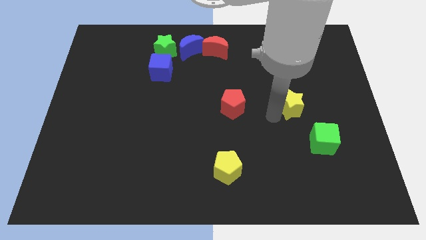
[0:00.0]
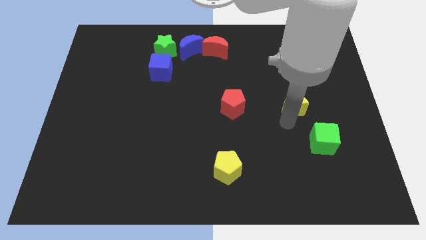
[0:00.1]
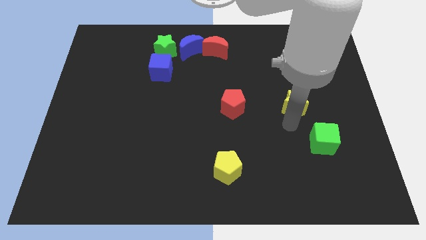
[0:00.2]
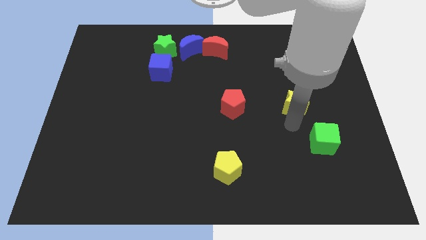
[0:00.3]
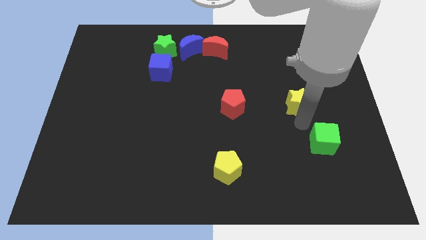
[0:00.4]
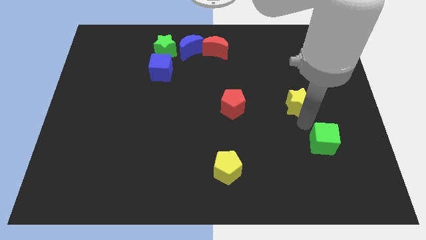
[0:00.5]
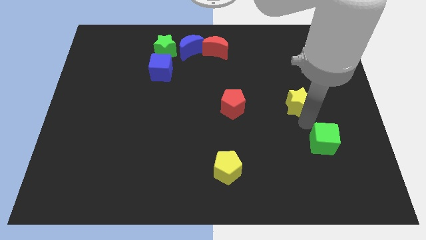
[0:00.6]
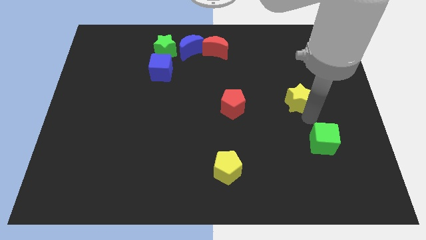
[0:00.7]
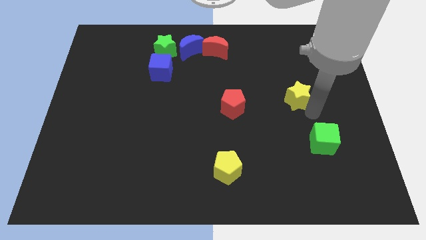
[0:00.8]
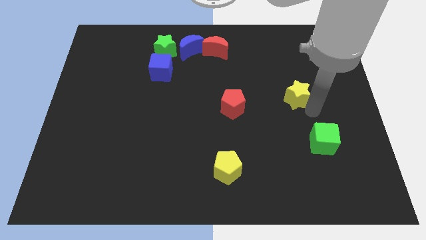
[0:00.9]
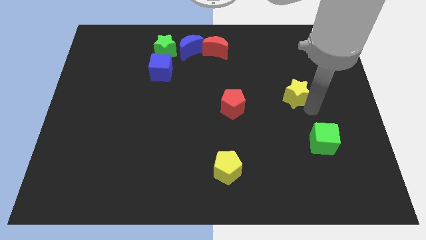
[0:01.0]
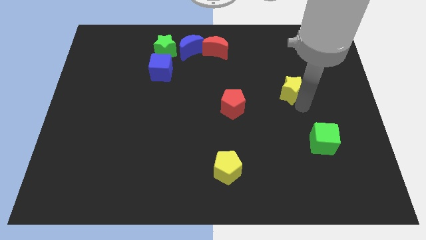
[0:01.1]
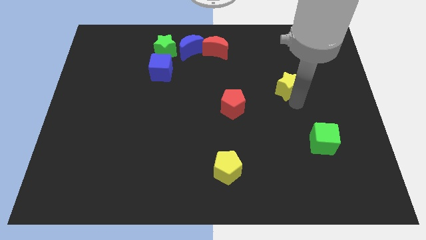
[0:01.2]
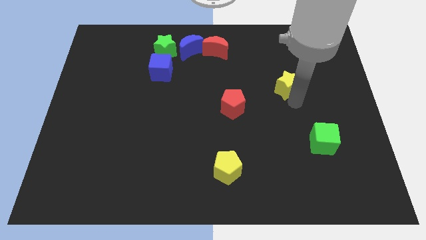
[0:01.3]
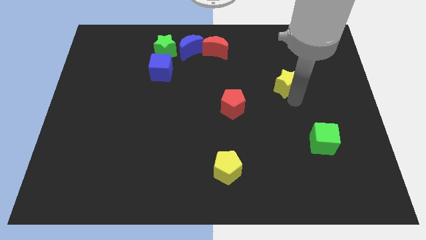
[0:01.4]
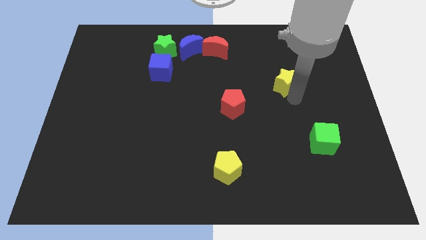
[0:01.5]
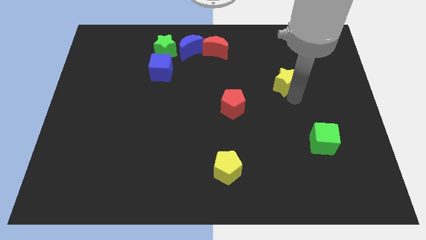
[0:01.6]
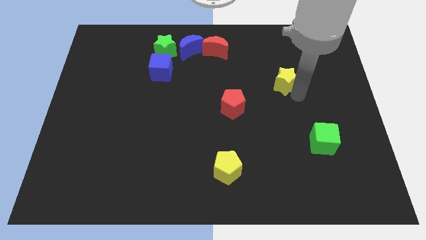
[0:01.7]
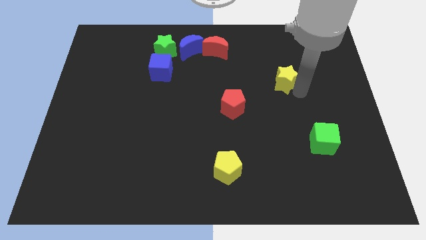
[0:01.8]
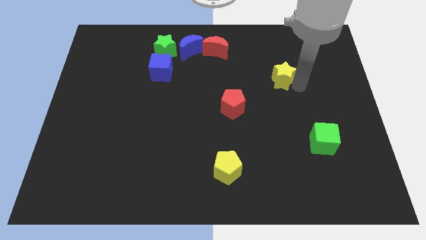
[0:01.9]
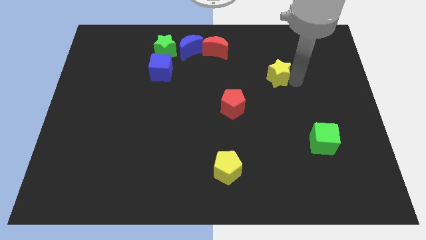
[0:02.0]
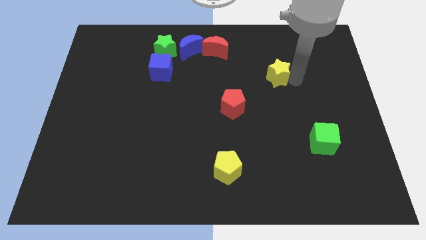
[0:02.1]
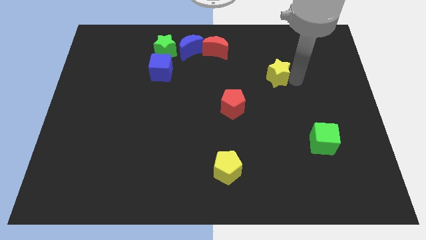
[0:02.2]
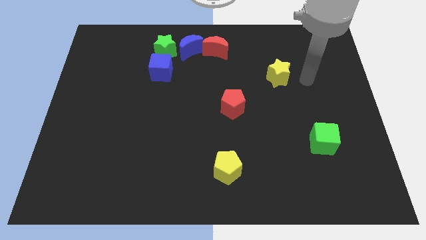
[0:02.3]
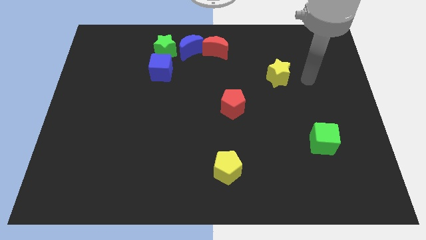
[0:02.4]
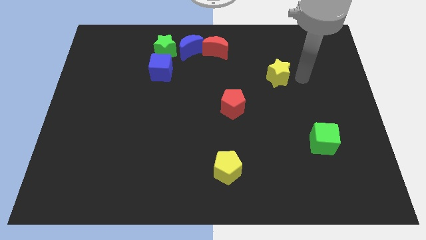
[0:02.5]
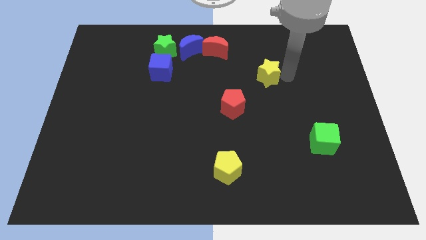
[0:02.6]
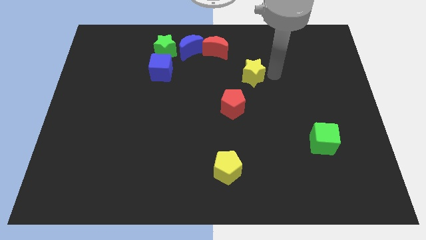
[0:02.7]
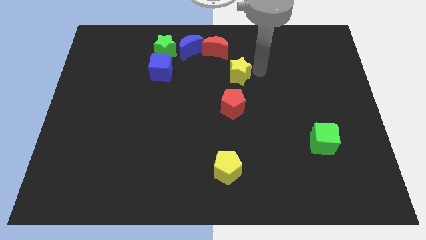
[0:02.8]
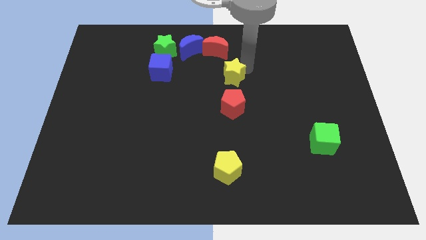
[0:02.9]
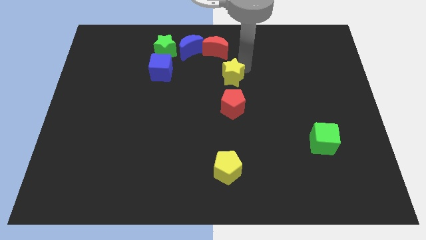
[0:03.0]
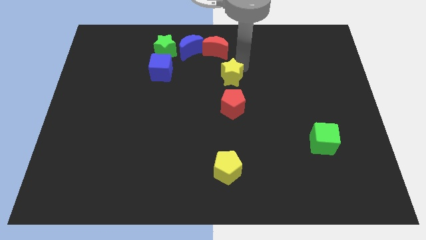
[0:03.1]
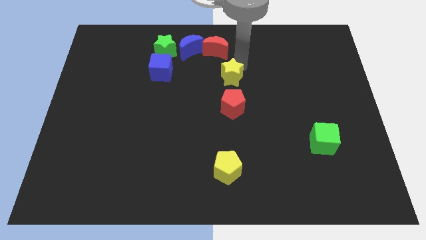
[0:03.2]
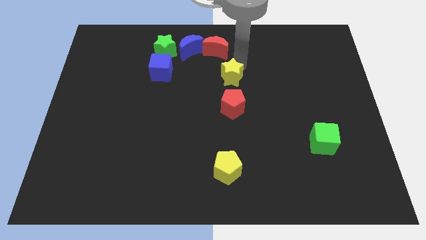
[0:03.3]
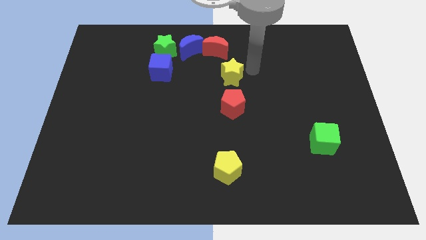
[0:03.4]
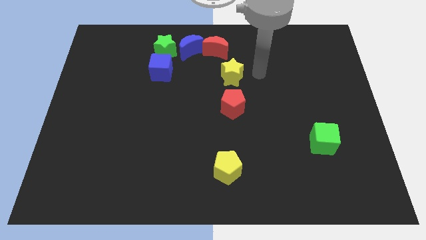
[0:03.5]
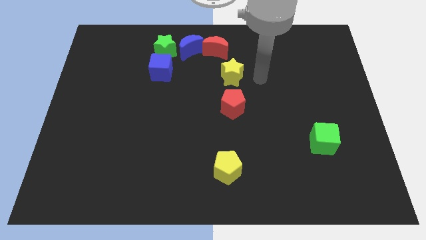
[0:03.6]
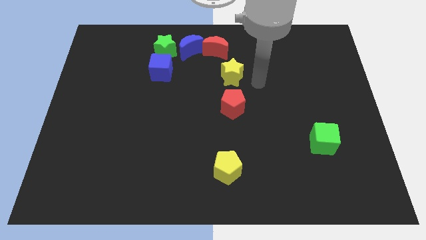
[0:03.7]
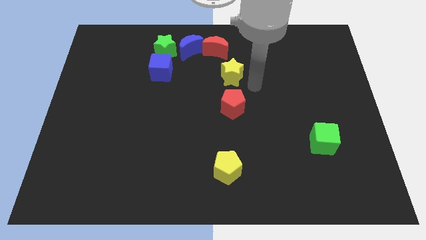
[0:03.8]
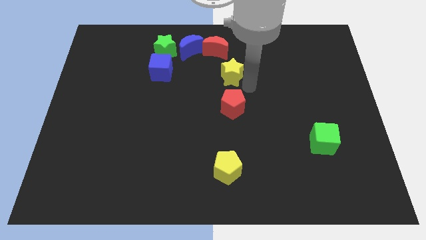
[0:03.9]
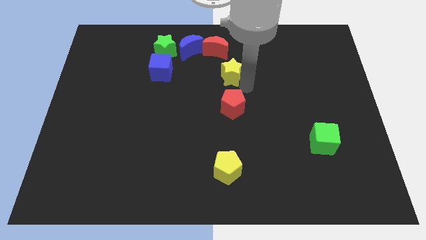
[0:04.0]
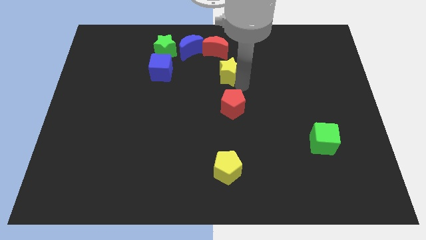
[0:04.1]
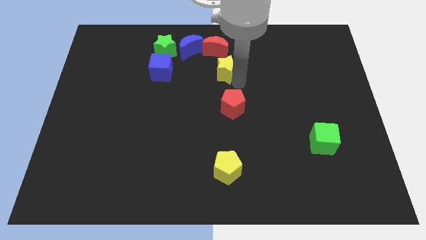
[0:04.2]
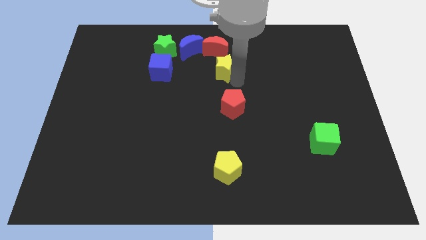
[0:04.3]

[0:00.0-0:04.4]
place yellow star in between red moon and red pentagon

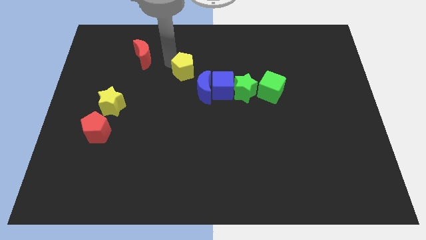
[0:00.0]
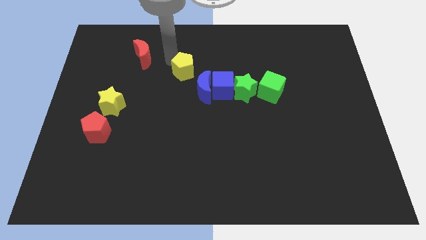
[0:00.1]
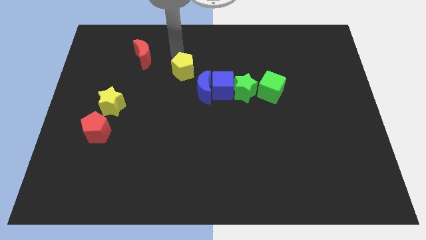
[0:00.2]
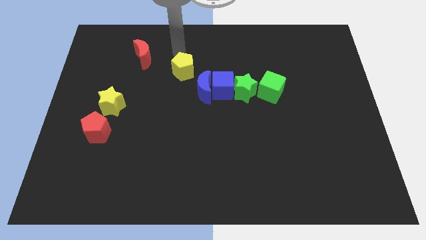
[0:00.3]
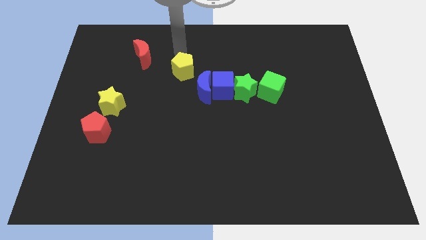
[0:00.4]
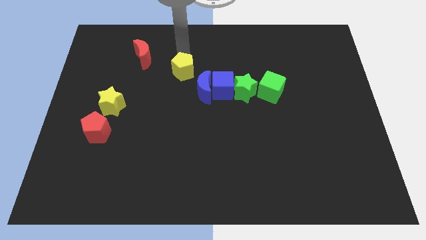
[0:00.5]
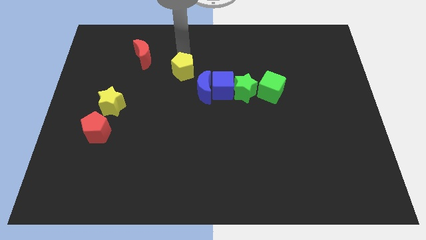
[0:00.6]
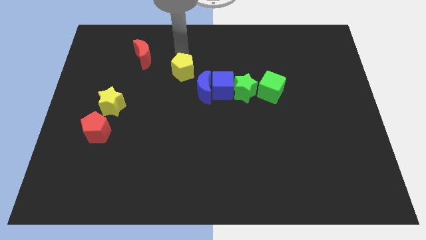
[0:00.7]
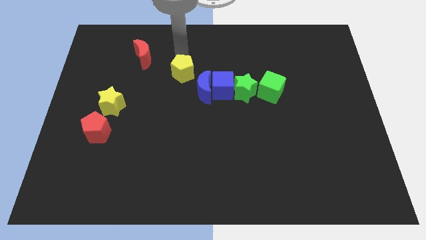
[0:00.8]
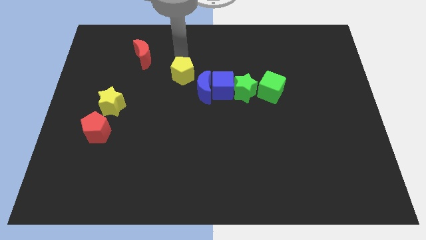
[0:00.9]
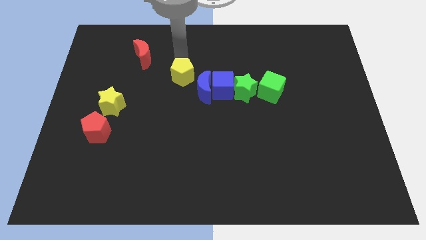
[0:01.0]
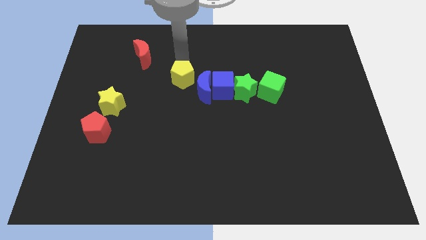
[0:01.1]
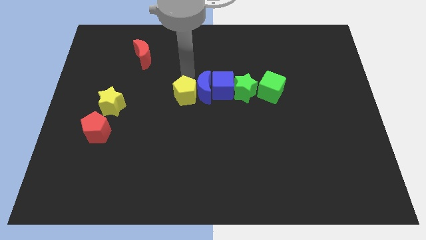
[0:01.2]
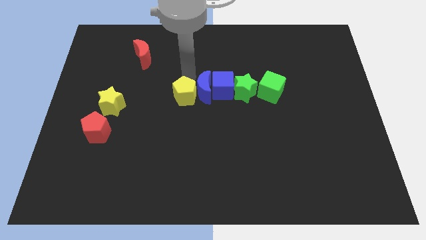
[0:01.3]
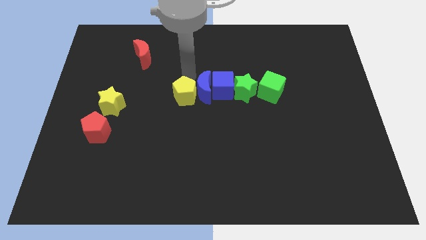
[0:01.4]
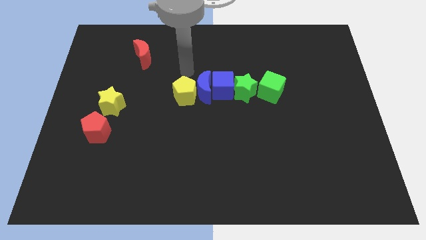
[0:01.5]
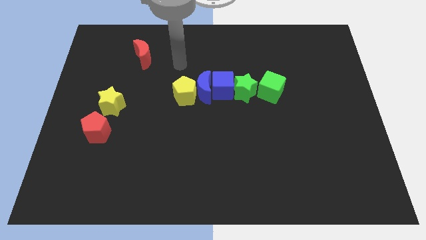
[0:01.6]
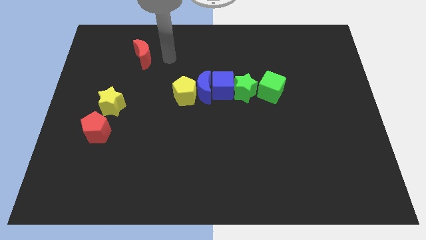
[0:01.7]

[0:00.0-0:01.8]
move the yellow pentagon to the left of the blue moon

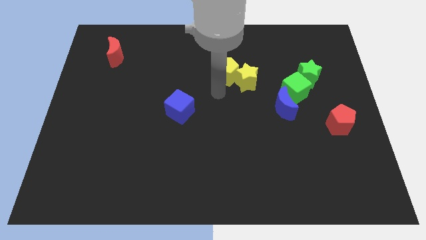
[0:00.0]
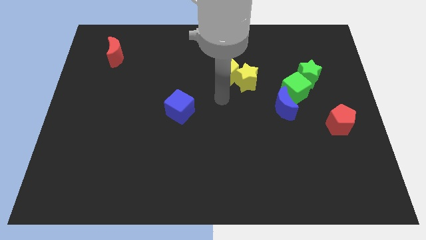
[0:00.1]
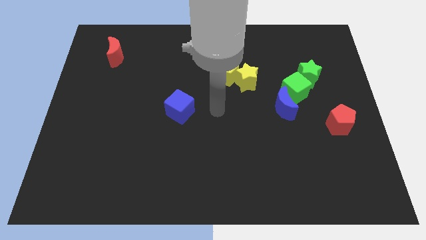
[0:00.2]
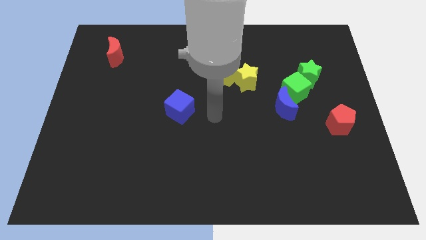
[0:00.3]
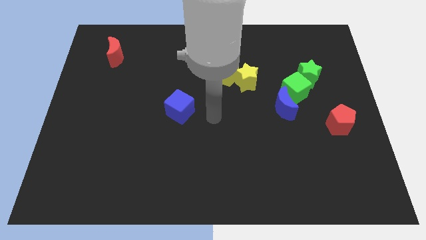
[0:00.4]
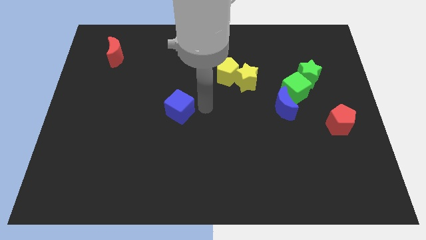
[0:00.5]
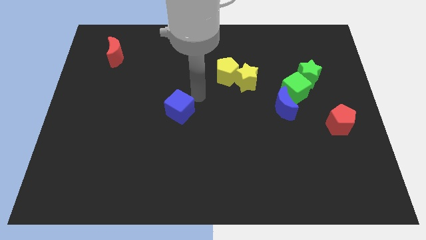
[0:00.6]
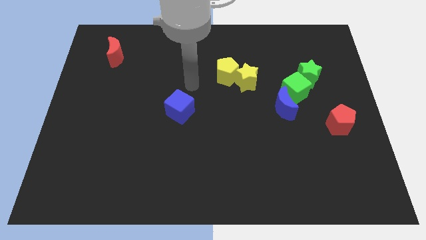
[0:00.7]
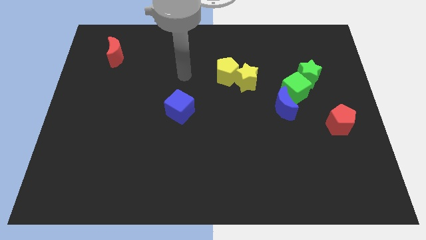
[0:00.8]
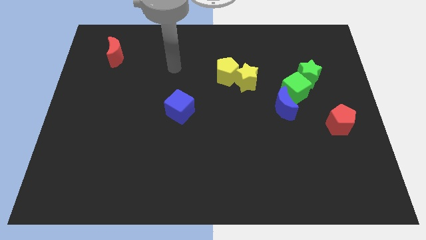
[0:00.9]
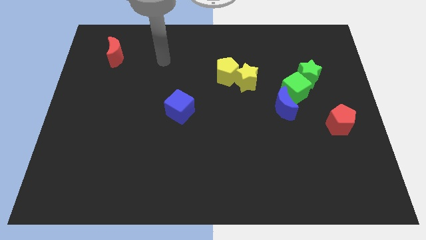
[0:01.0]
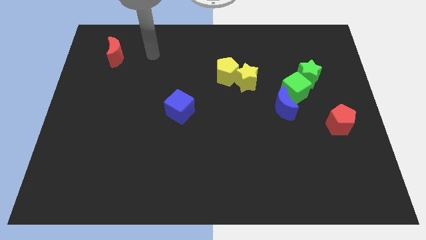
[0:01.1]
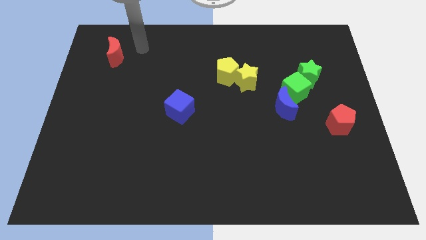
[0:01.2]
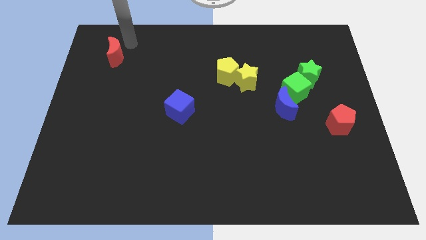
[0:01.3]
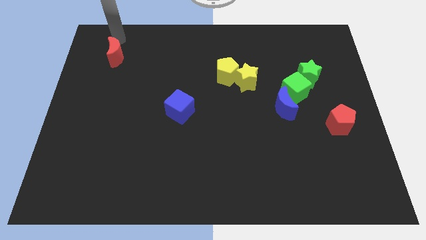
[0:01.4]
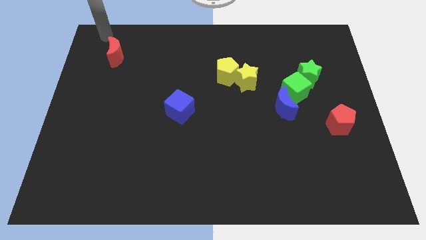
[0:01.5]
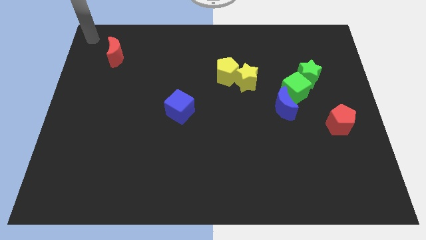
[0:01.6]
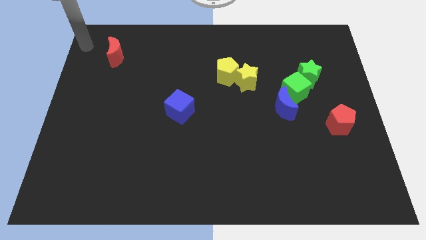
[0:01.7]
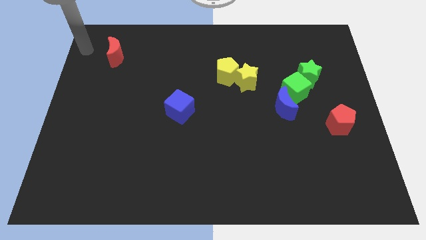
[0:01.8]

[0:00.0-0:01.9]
place the arm close to the red moon

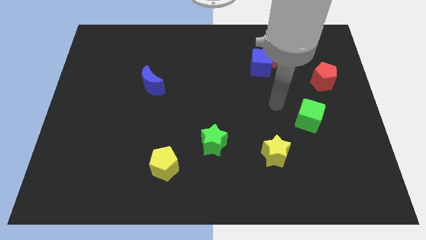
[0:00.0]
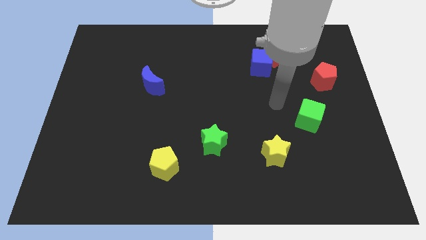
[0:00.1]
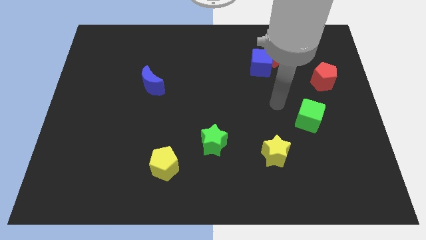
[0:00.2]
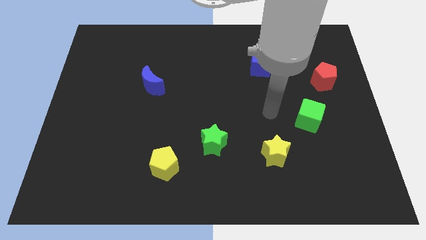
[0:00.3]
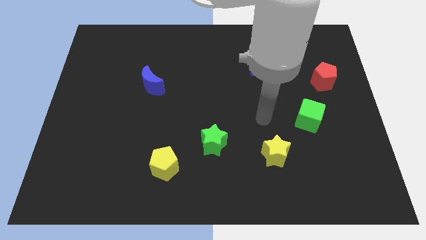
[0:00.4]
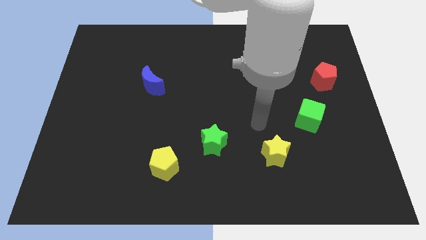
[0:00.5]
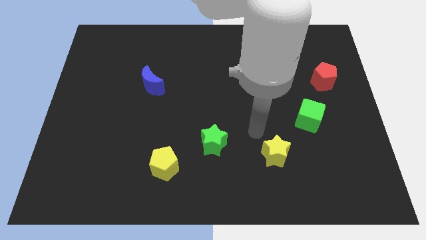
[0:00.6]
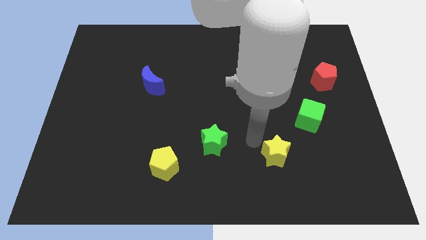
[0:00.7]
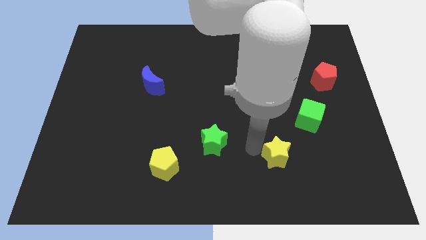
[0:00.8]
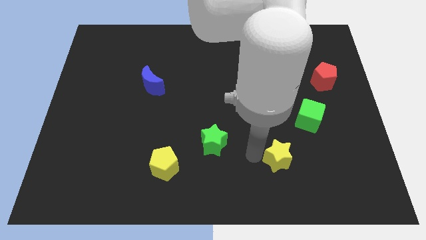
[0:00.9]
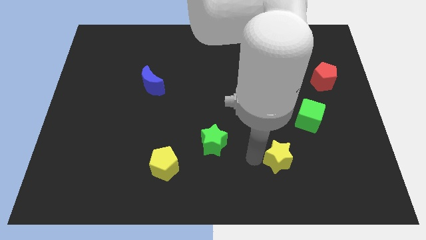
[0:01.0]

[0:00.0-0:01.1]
place your hand in between both the stars
